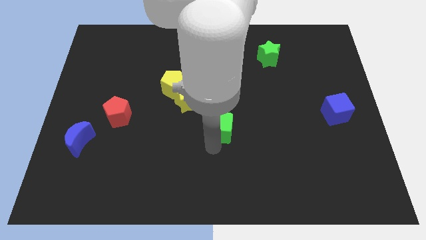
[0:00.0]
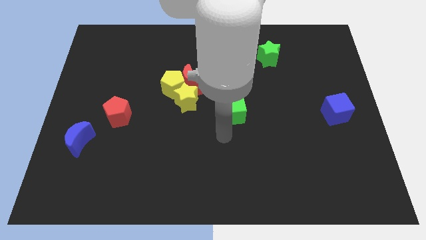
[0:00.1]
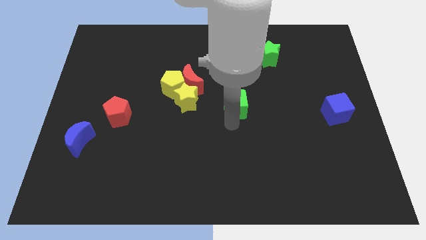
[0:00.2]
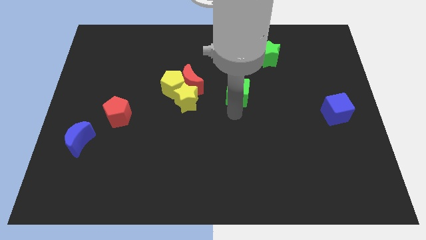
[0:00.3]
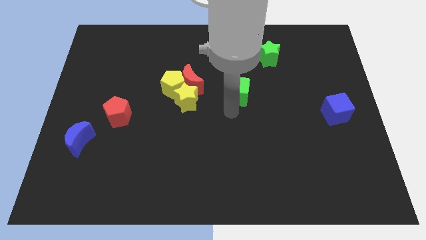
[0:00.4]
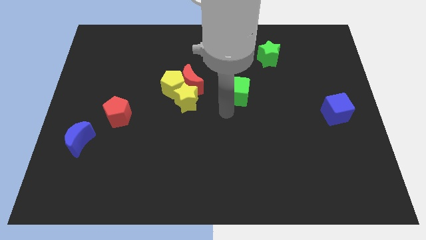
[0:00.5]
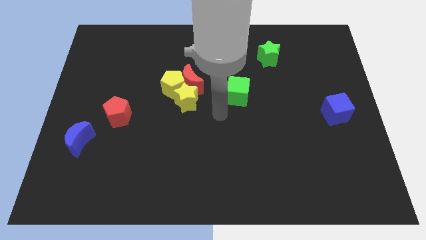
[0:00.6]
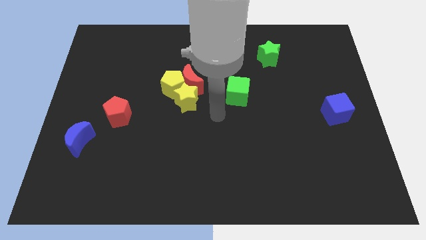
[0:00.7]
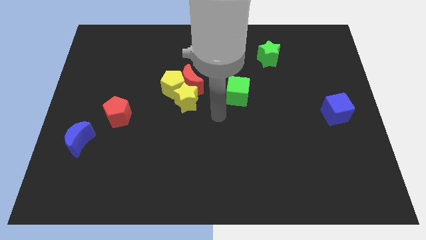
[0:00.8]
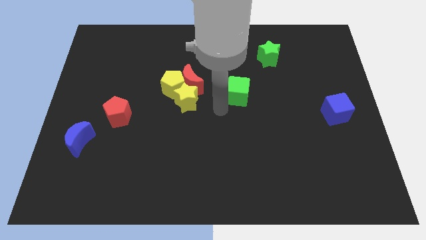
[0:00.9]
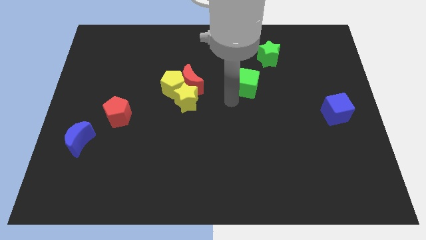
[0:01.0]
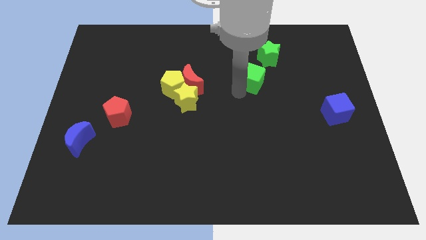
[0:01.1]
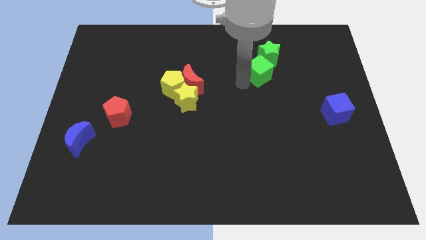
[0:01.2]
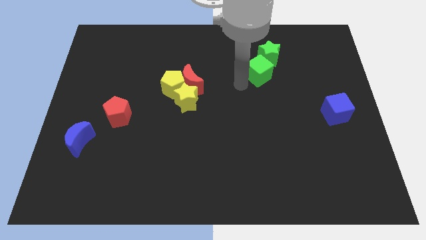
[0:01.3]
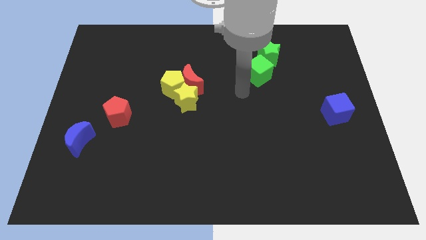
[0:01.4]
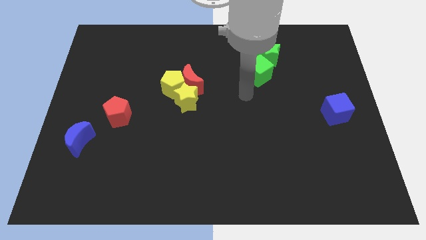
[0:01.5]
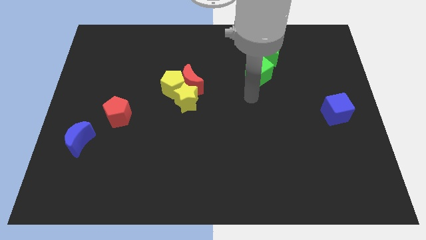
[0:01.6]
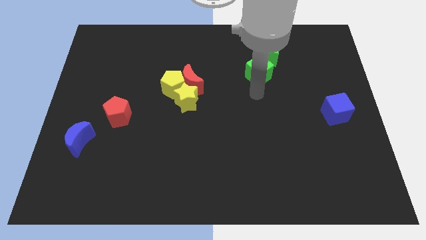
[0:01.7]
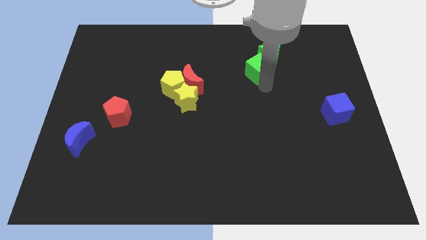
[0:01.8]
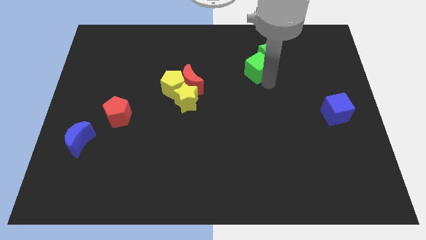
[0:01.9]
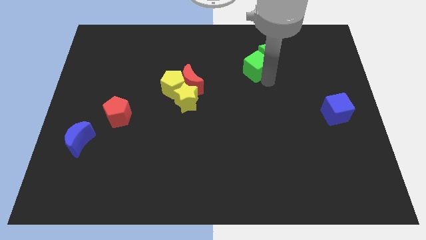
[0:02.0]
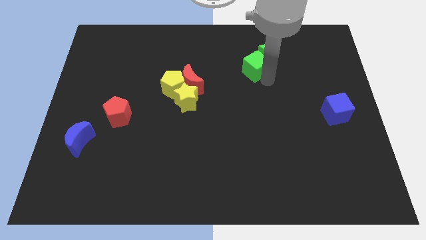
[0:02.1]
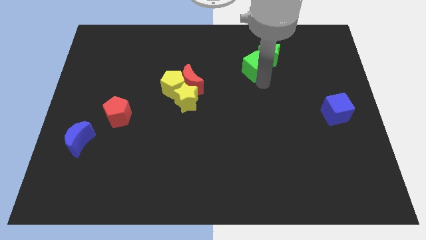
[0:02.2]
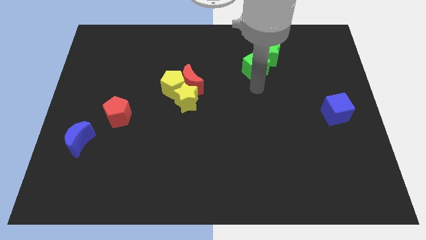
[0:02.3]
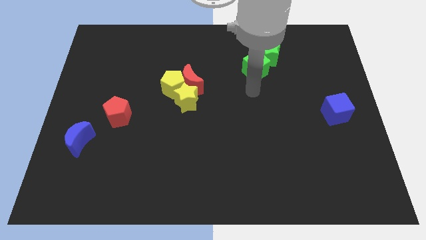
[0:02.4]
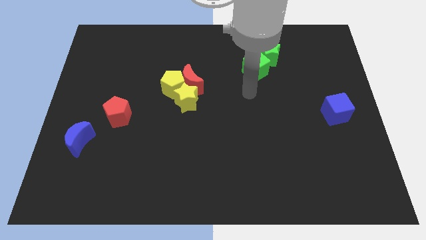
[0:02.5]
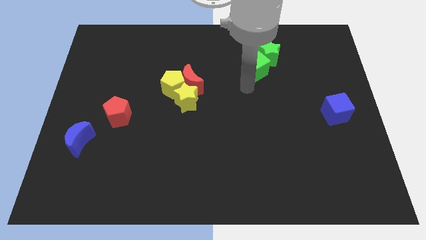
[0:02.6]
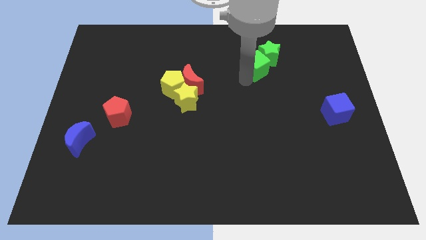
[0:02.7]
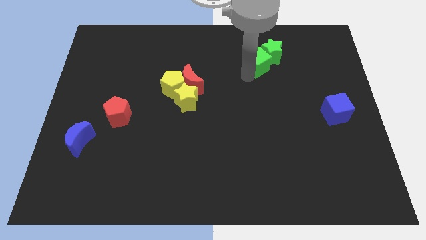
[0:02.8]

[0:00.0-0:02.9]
push the green cube into the green star

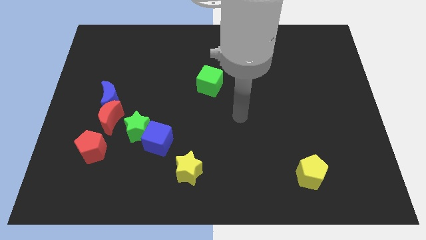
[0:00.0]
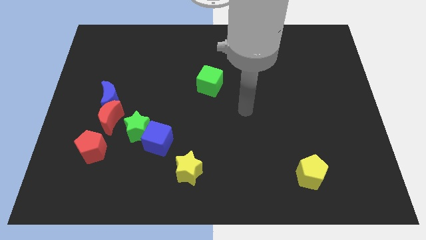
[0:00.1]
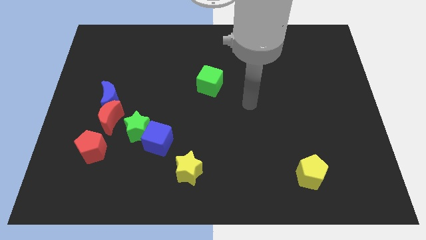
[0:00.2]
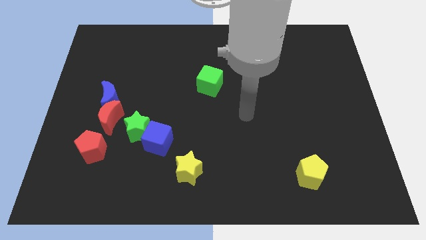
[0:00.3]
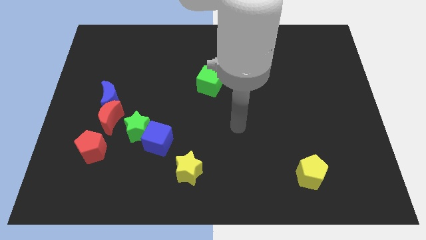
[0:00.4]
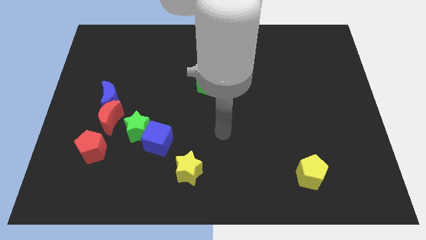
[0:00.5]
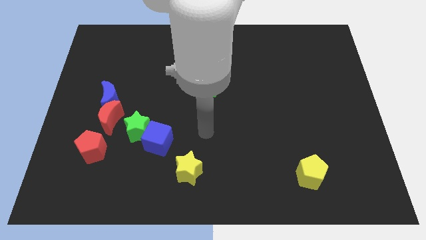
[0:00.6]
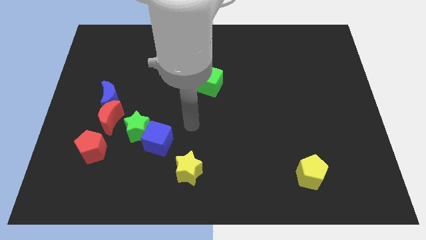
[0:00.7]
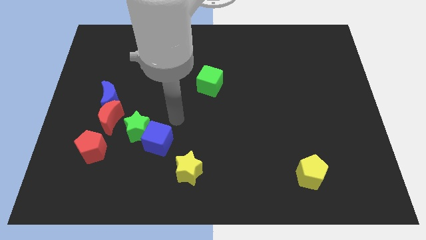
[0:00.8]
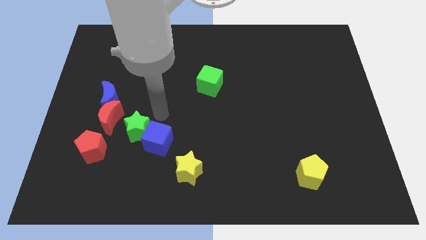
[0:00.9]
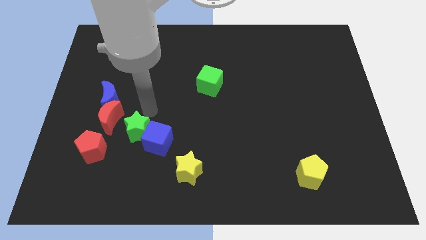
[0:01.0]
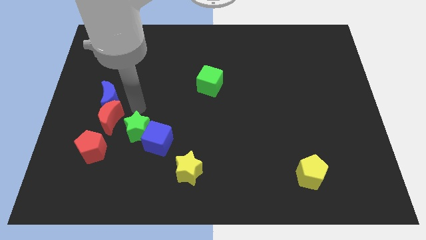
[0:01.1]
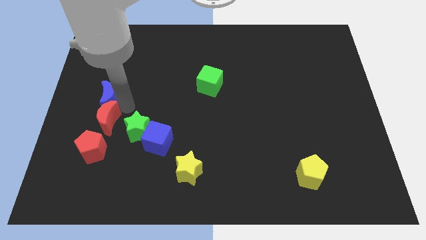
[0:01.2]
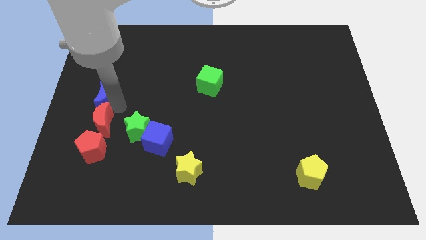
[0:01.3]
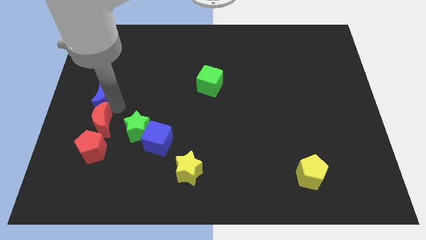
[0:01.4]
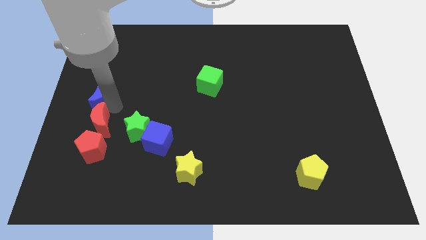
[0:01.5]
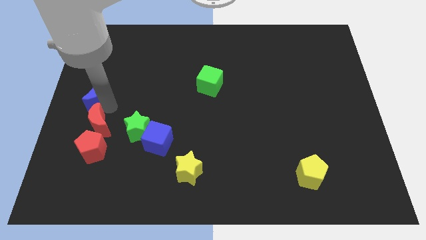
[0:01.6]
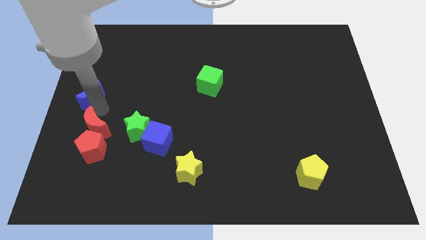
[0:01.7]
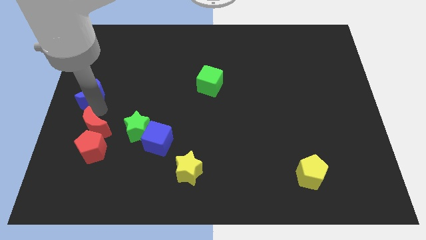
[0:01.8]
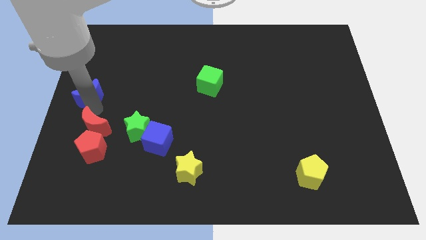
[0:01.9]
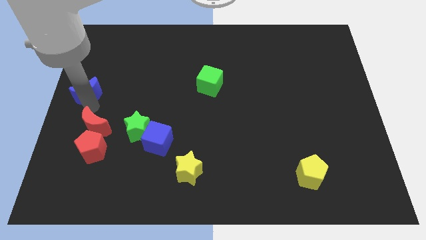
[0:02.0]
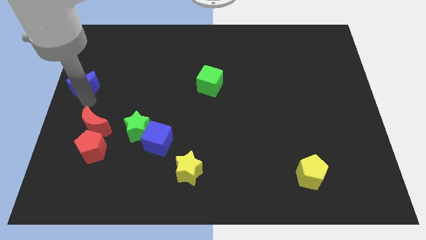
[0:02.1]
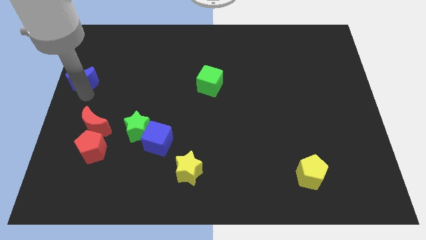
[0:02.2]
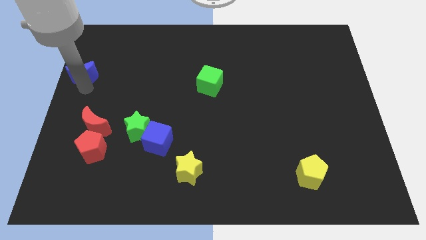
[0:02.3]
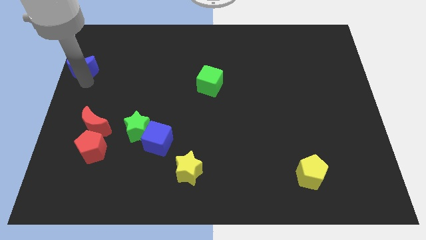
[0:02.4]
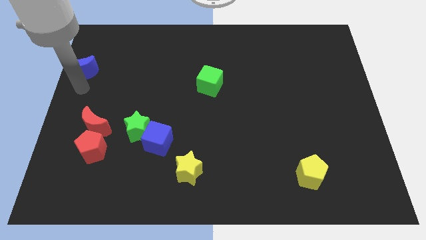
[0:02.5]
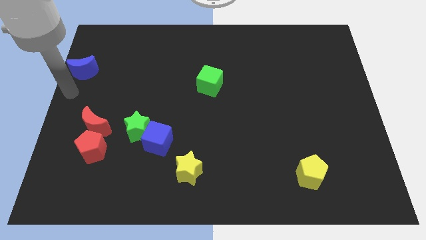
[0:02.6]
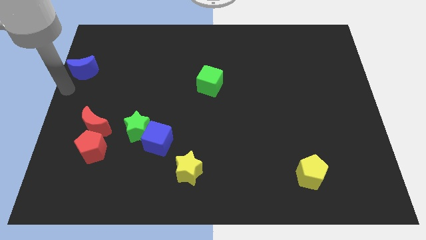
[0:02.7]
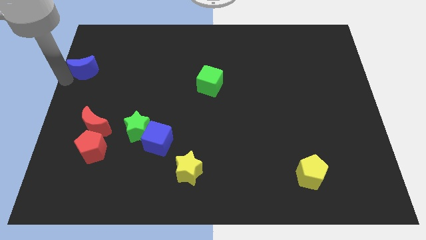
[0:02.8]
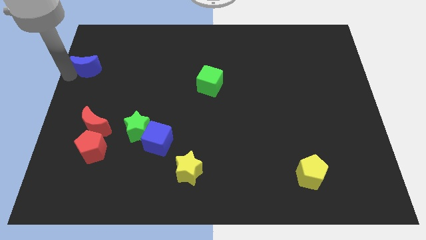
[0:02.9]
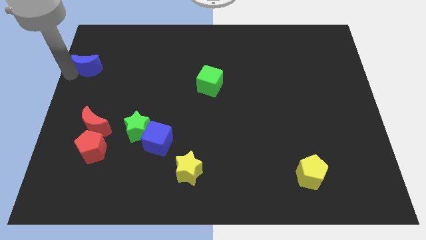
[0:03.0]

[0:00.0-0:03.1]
separate blue moon from red moon

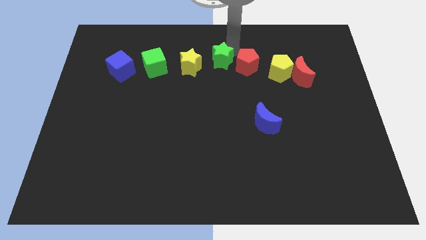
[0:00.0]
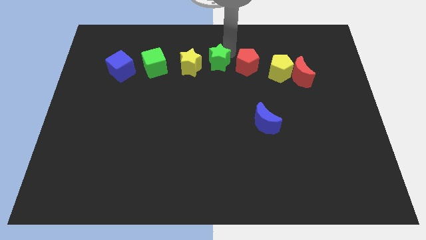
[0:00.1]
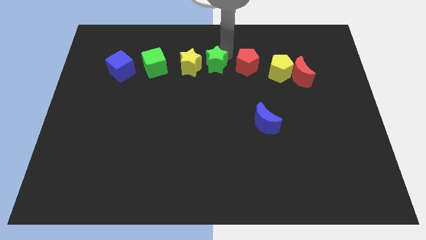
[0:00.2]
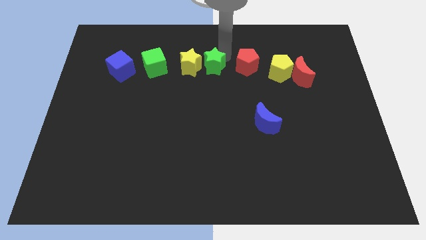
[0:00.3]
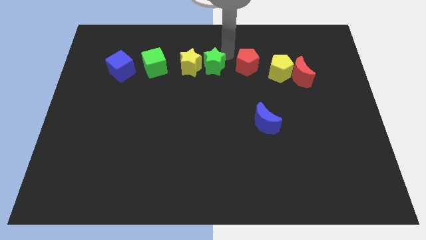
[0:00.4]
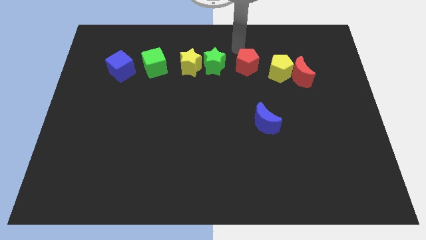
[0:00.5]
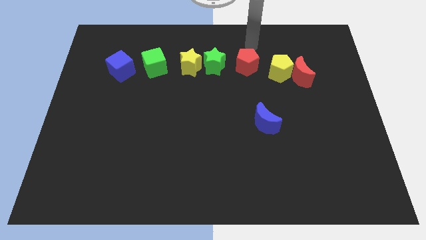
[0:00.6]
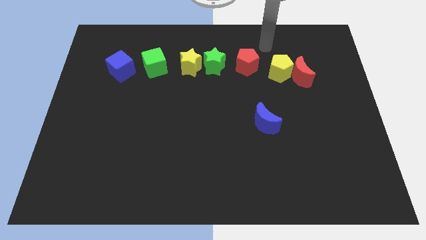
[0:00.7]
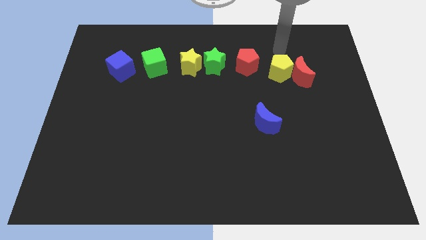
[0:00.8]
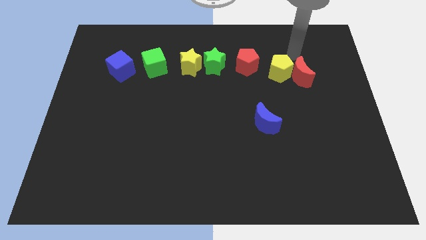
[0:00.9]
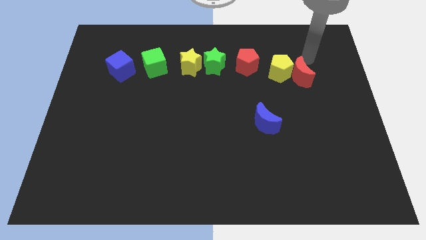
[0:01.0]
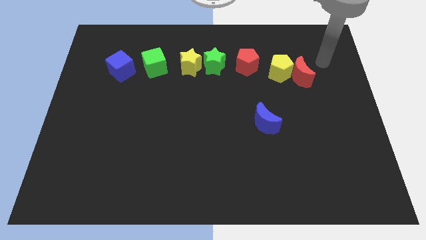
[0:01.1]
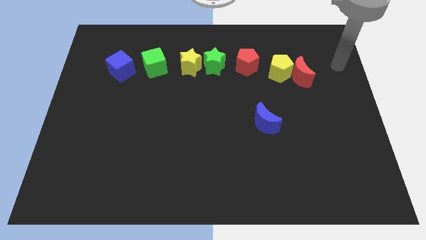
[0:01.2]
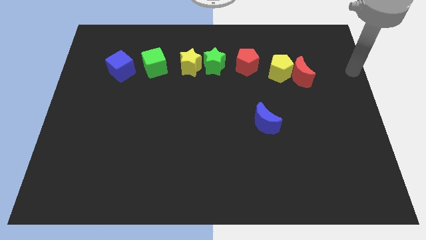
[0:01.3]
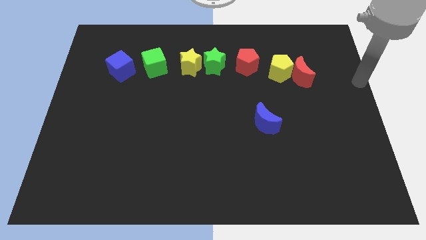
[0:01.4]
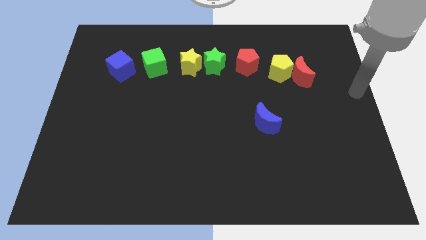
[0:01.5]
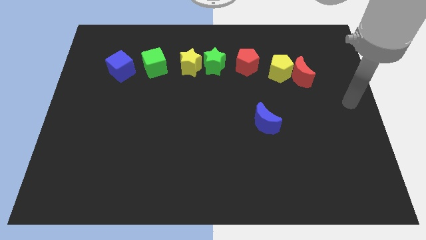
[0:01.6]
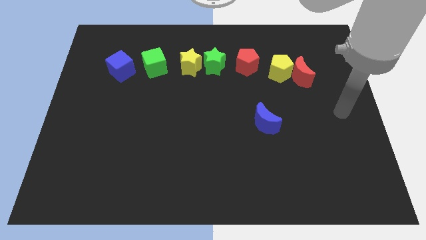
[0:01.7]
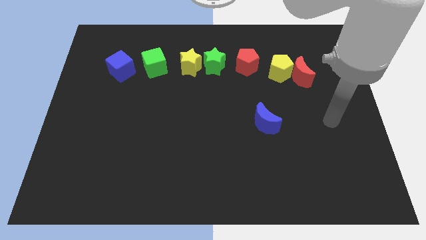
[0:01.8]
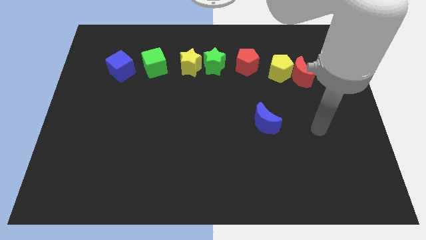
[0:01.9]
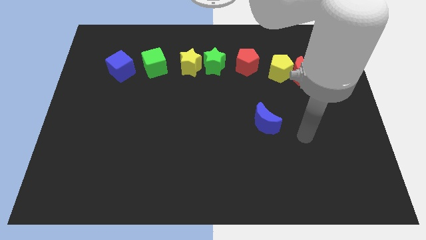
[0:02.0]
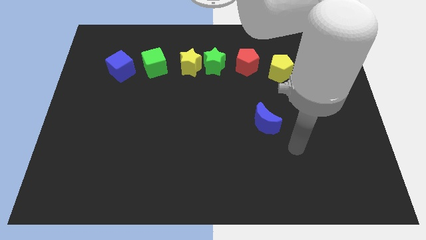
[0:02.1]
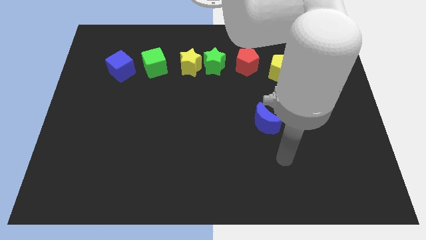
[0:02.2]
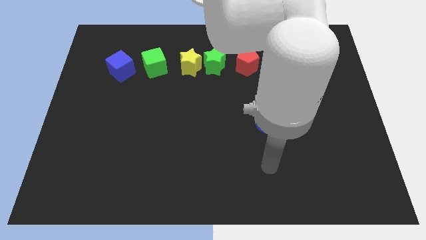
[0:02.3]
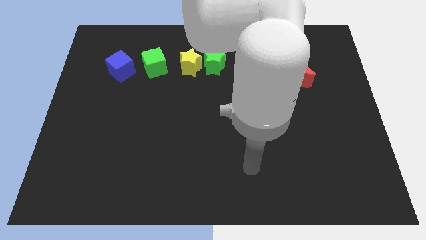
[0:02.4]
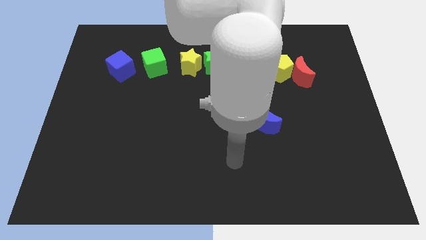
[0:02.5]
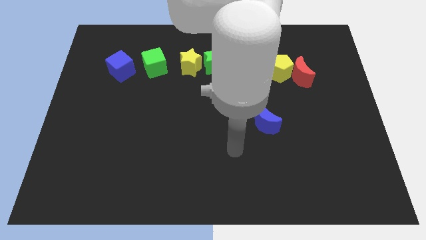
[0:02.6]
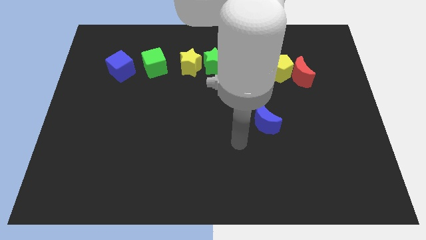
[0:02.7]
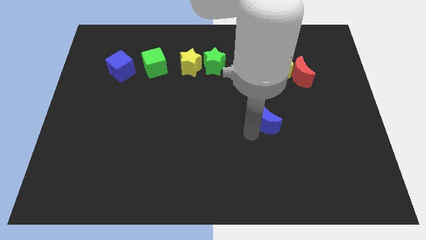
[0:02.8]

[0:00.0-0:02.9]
place the arm at the bottom left of the blue moon
